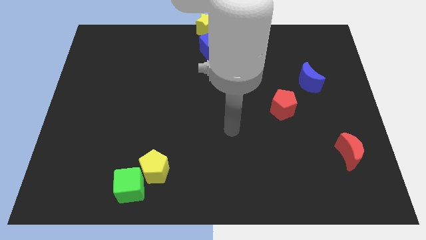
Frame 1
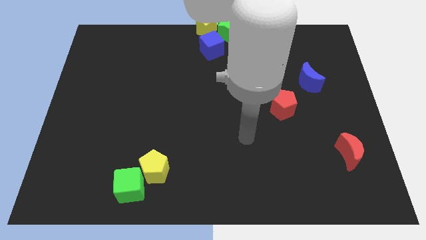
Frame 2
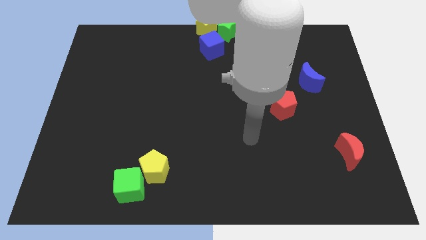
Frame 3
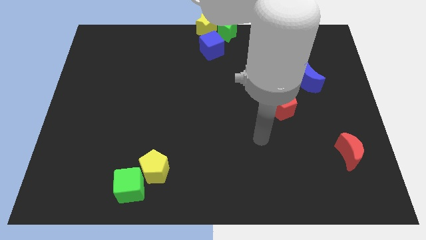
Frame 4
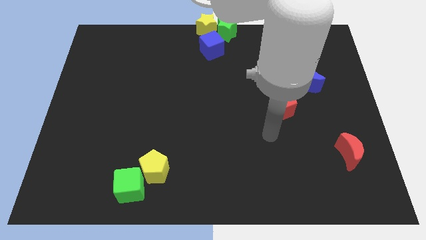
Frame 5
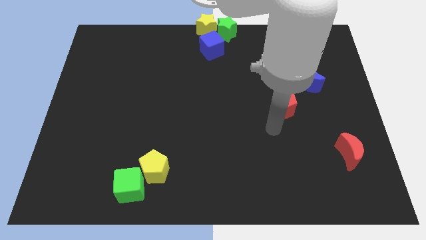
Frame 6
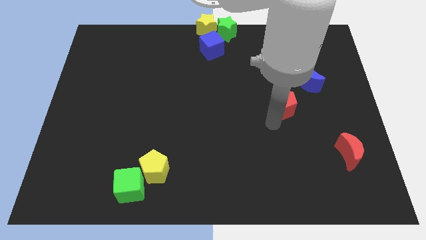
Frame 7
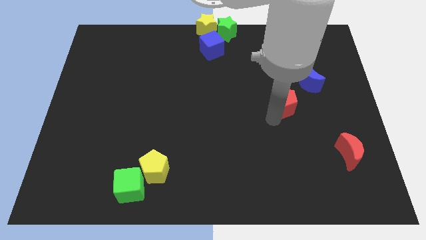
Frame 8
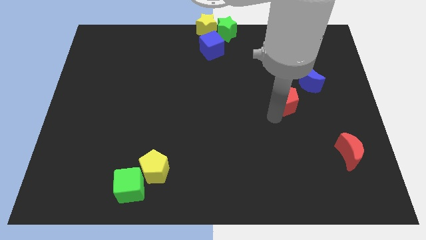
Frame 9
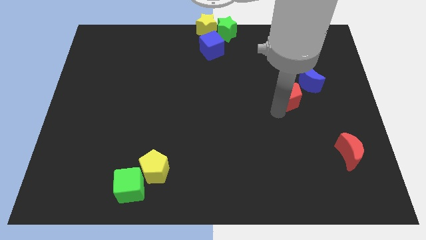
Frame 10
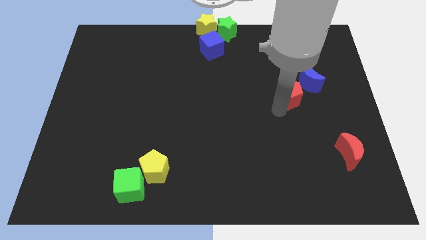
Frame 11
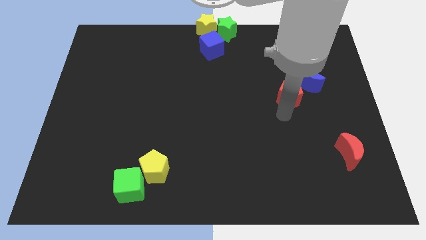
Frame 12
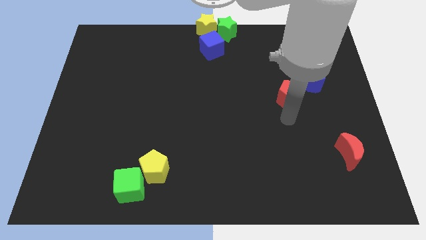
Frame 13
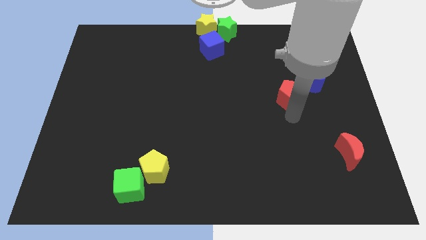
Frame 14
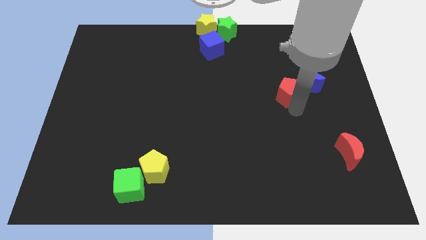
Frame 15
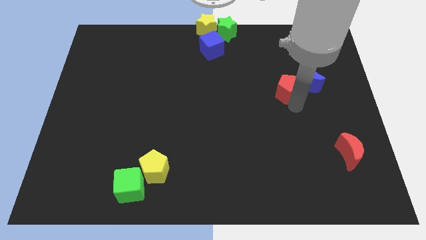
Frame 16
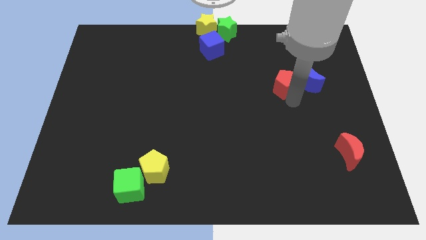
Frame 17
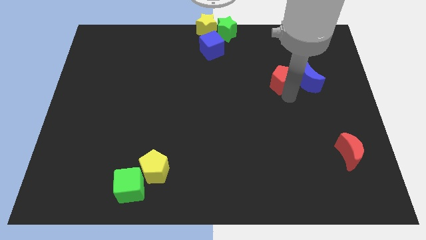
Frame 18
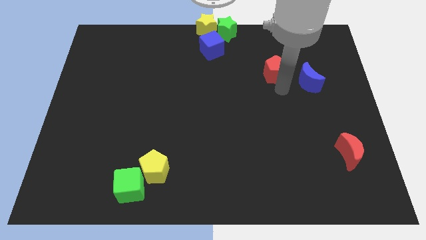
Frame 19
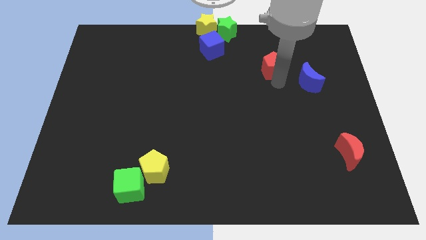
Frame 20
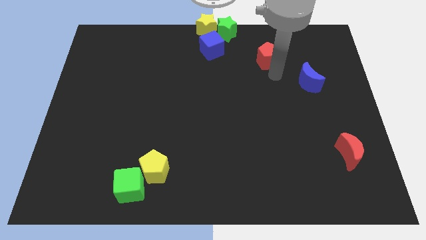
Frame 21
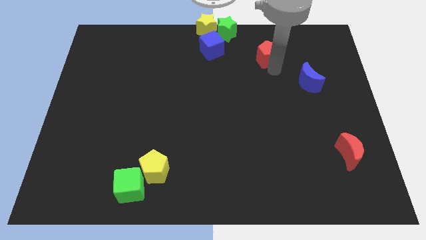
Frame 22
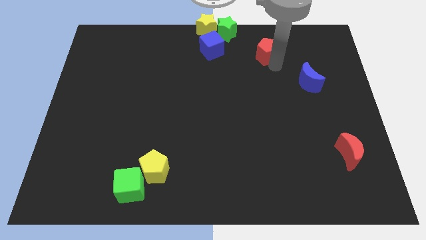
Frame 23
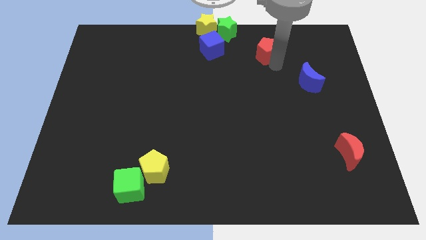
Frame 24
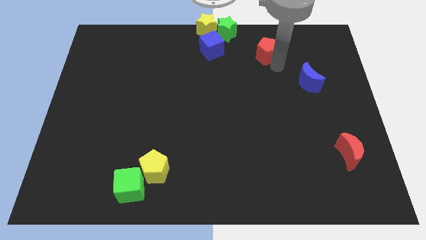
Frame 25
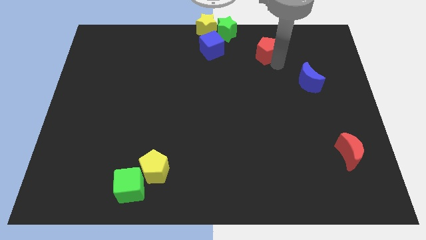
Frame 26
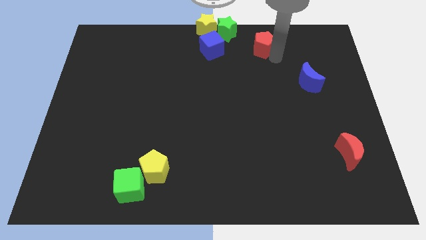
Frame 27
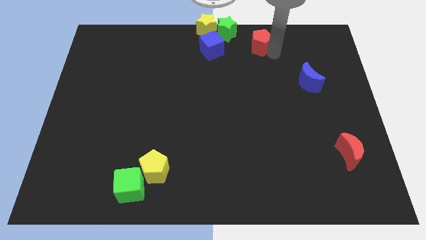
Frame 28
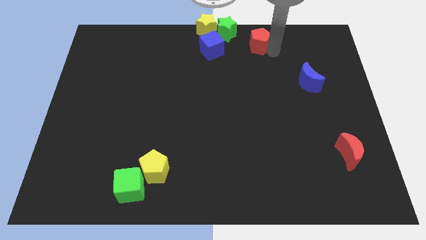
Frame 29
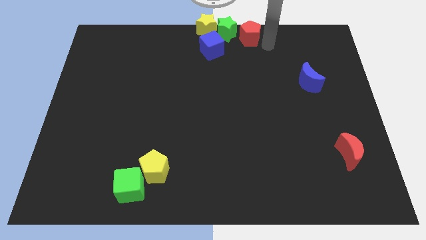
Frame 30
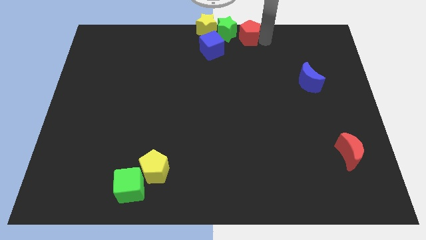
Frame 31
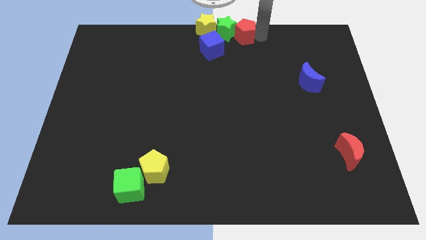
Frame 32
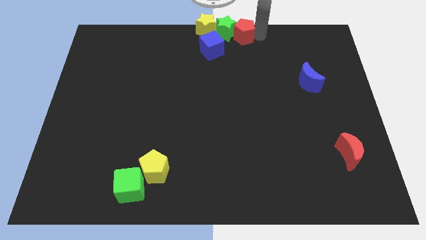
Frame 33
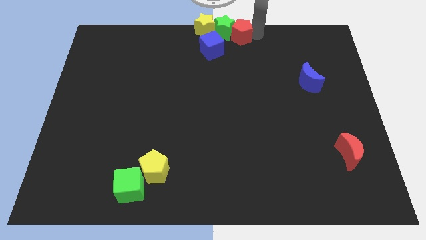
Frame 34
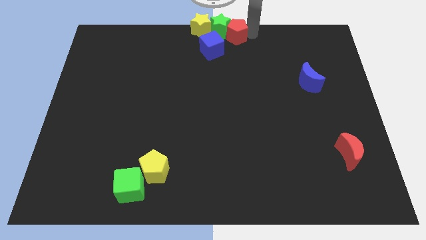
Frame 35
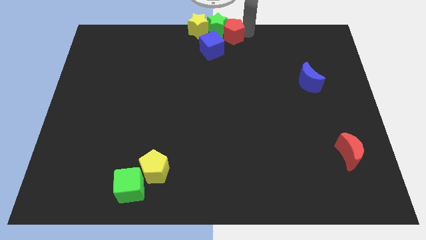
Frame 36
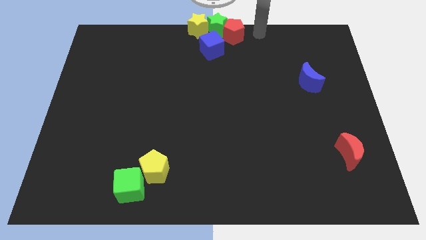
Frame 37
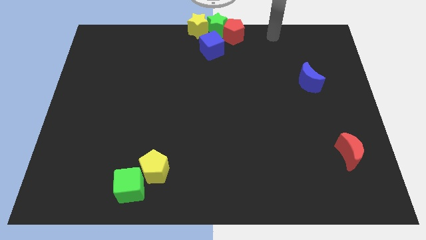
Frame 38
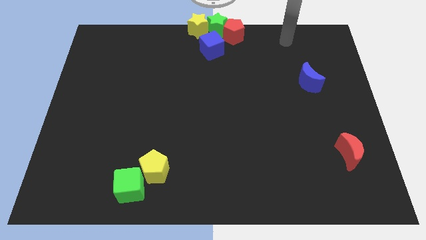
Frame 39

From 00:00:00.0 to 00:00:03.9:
slide the red pentagon into the green star

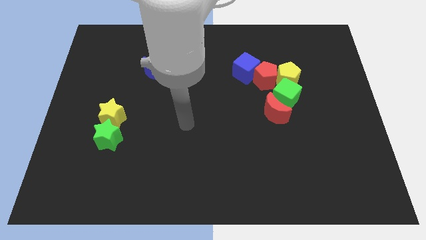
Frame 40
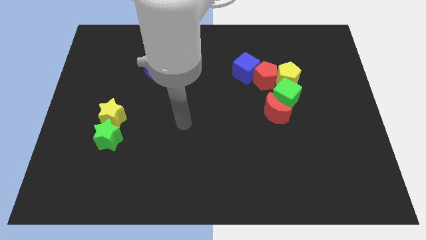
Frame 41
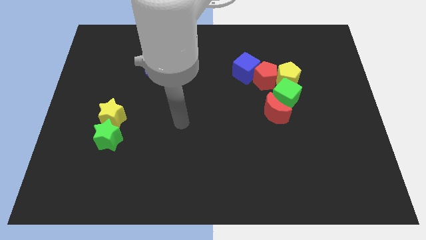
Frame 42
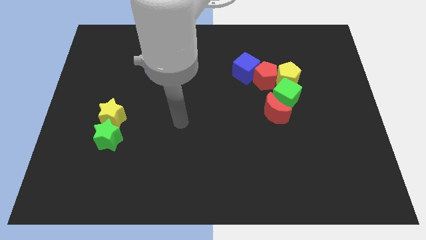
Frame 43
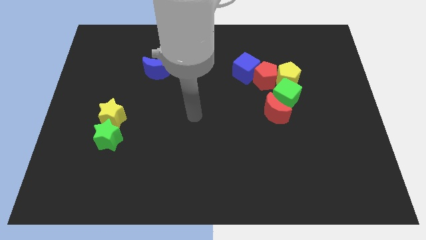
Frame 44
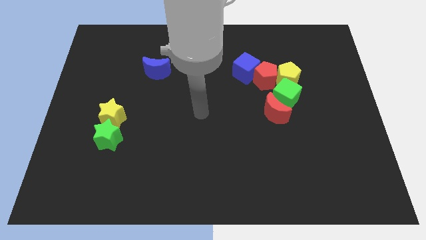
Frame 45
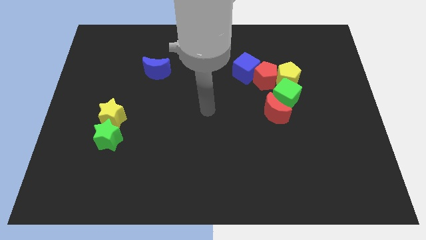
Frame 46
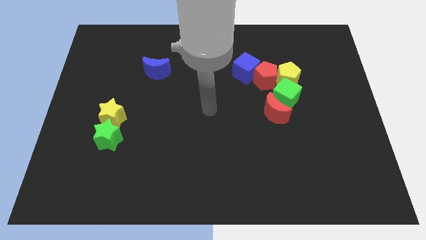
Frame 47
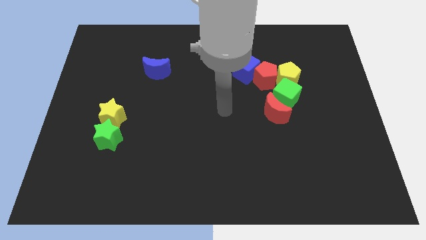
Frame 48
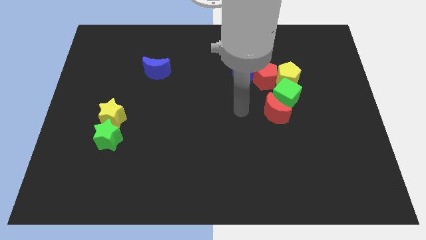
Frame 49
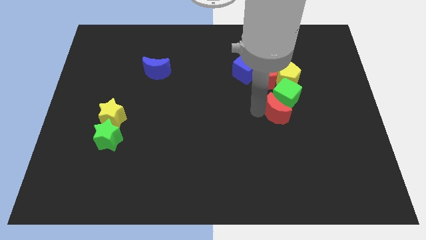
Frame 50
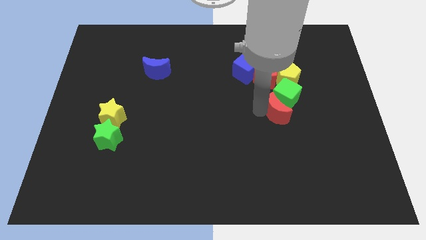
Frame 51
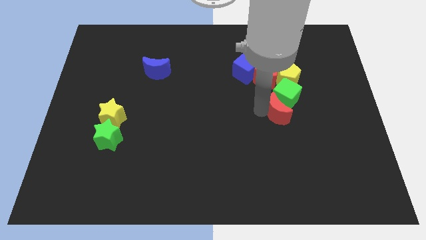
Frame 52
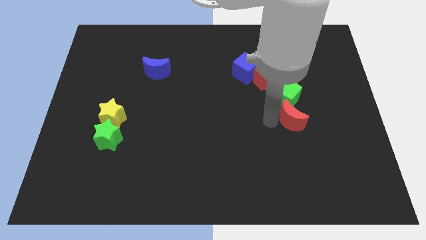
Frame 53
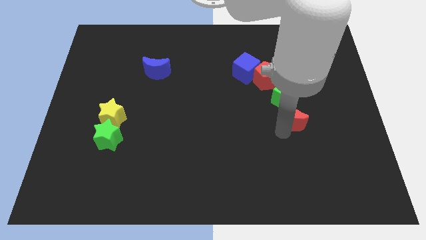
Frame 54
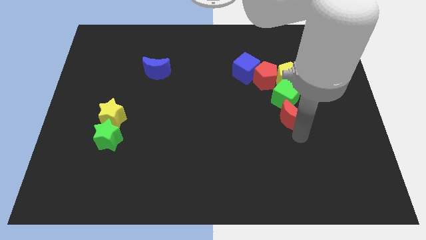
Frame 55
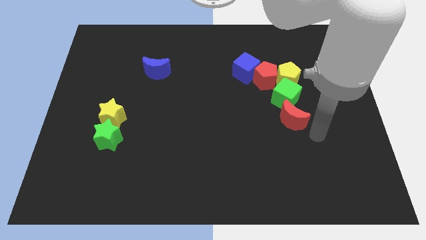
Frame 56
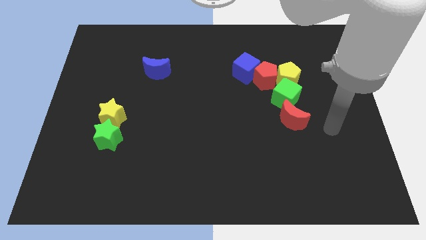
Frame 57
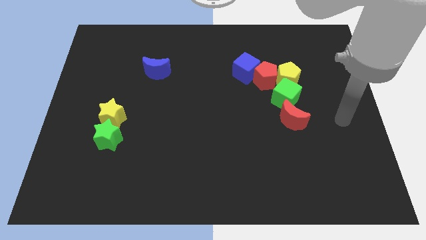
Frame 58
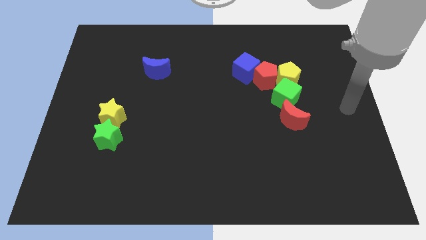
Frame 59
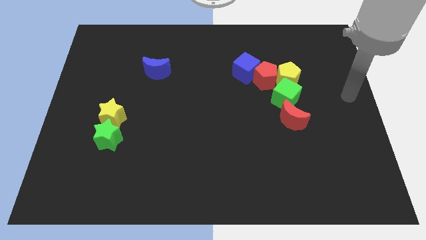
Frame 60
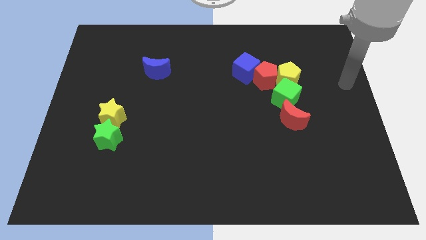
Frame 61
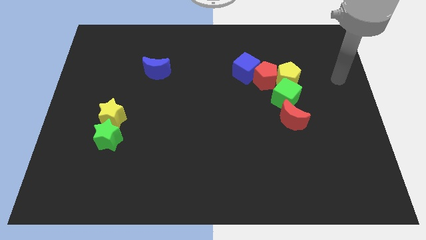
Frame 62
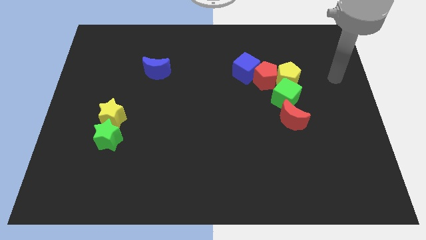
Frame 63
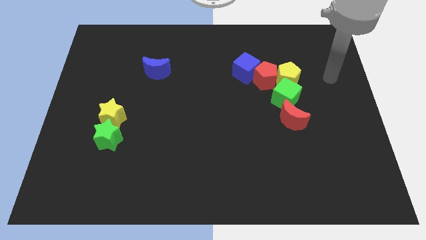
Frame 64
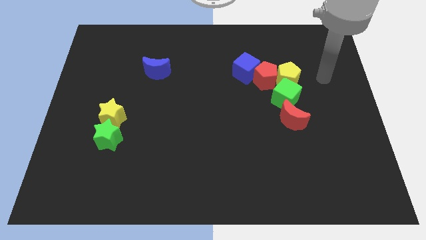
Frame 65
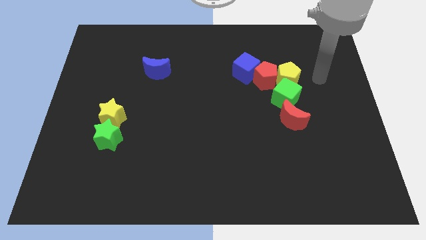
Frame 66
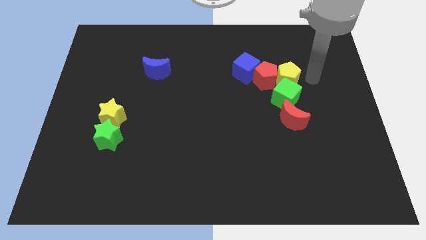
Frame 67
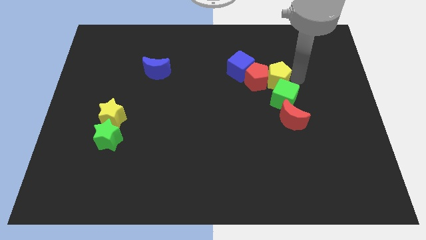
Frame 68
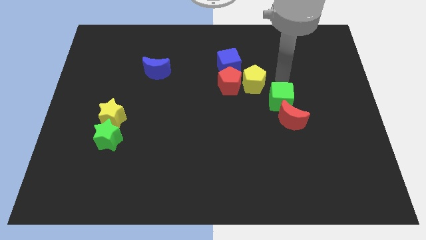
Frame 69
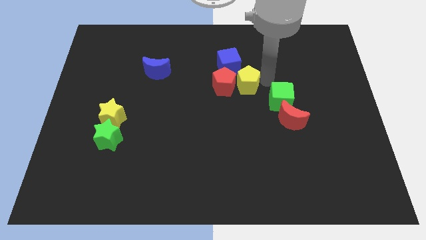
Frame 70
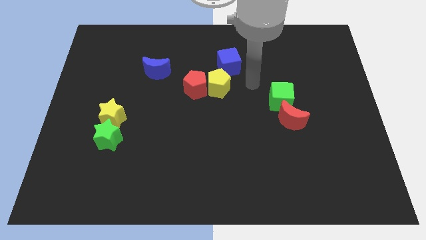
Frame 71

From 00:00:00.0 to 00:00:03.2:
move both the pentagons to the bottom side of the blue cube

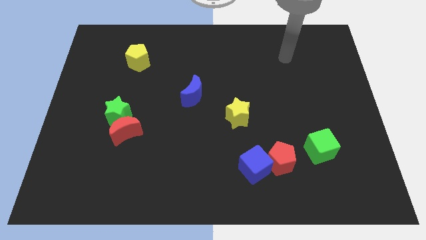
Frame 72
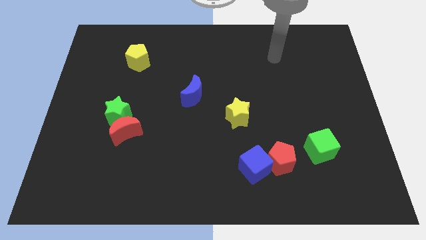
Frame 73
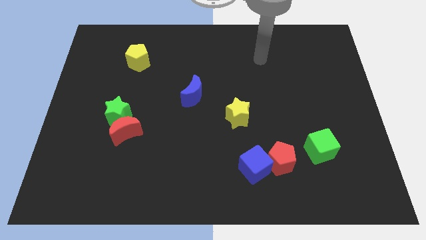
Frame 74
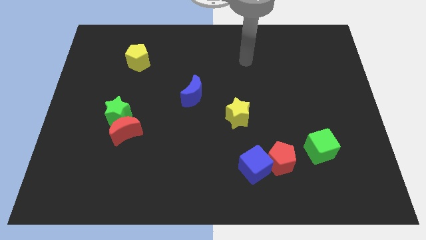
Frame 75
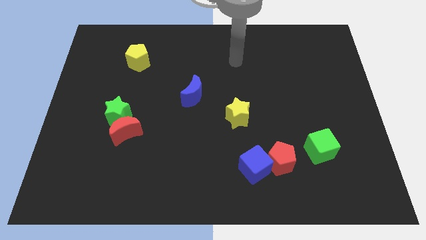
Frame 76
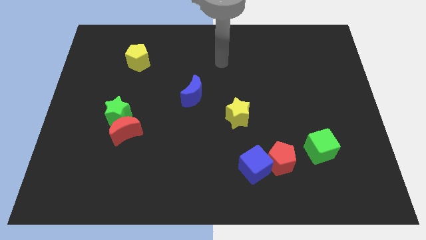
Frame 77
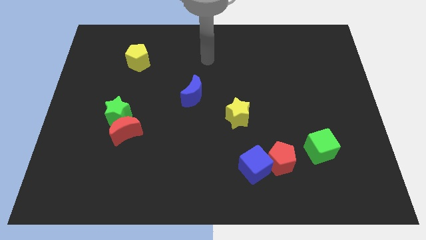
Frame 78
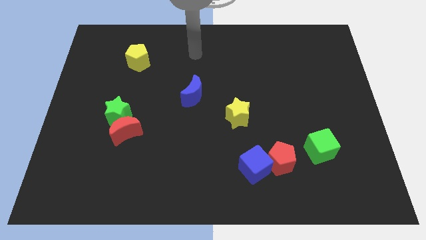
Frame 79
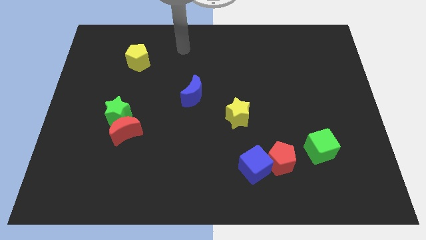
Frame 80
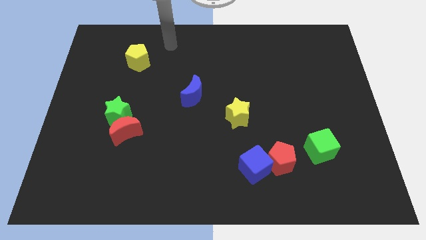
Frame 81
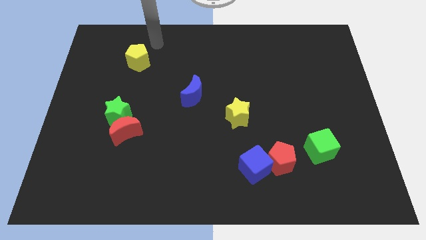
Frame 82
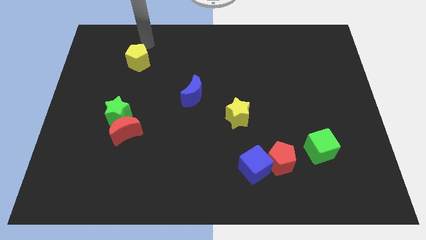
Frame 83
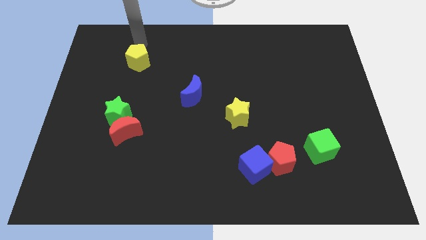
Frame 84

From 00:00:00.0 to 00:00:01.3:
place your arm to the top of yellow pentagon

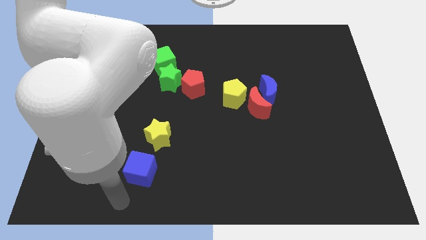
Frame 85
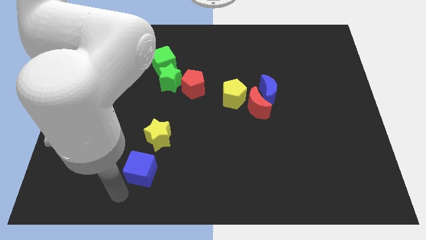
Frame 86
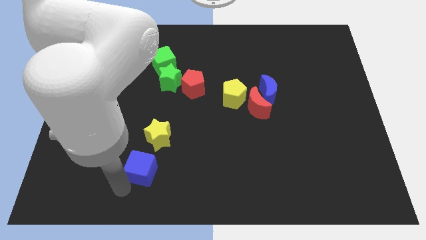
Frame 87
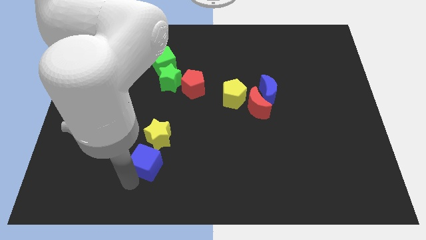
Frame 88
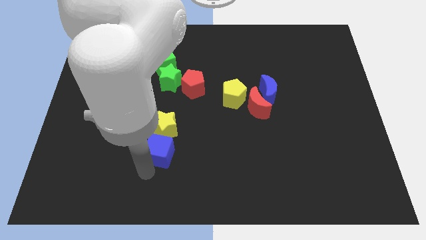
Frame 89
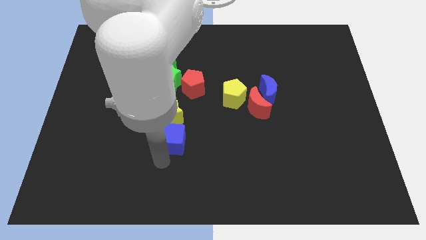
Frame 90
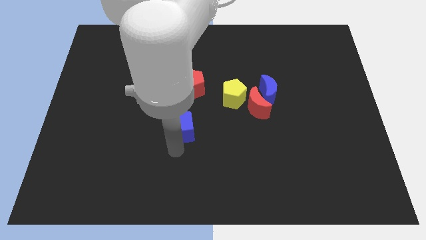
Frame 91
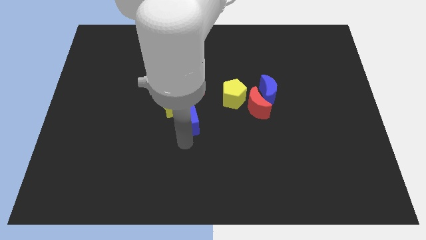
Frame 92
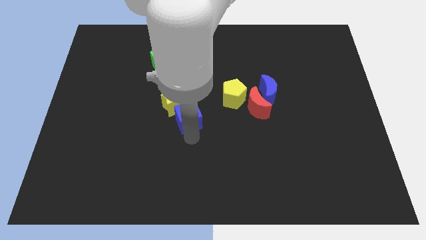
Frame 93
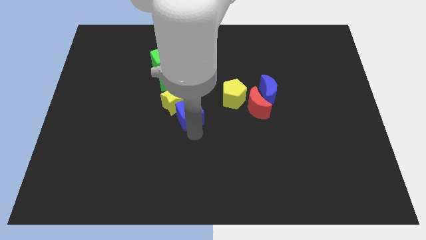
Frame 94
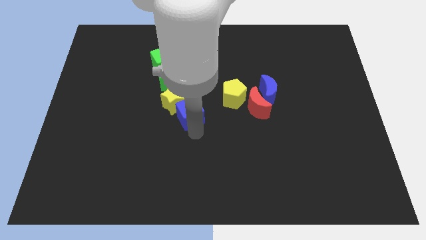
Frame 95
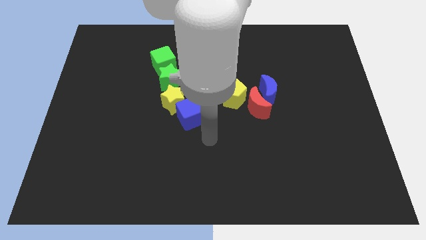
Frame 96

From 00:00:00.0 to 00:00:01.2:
push the blue cube into the yellow star
